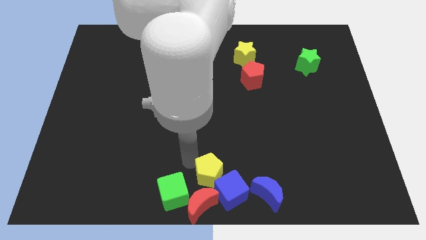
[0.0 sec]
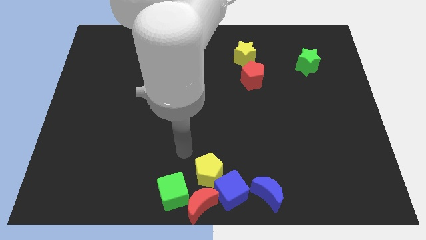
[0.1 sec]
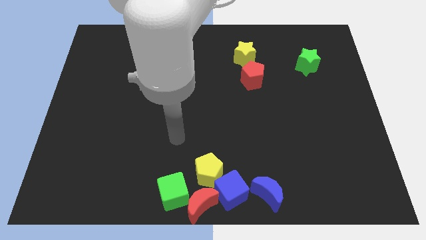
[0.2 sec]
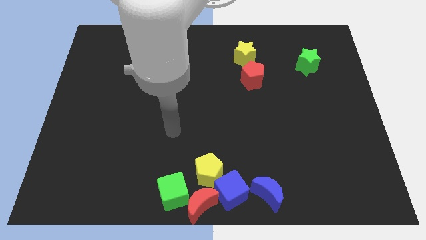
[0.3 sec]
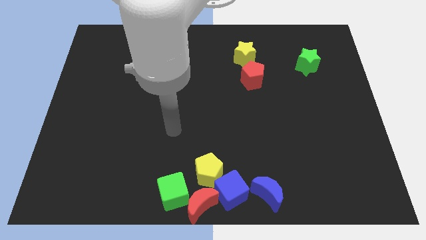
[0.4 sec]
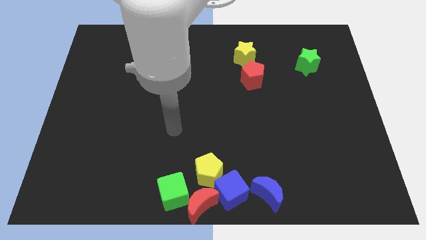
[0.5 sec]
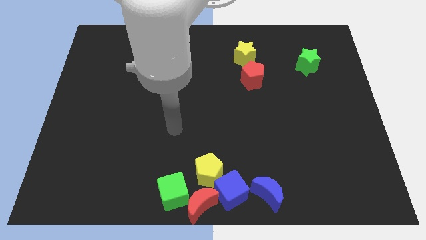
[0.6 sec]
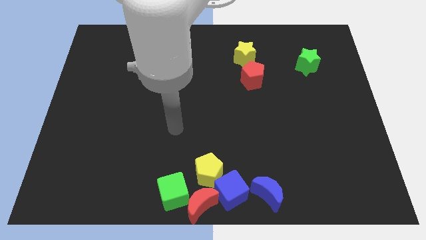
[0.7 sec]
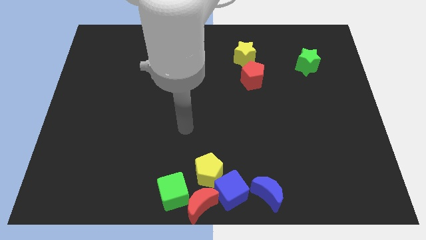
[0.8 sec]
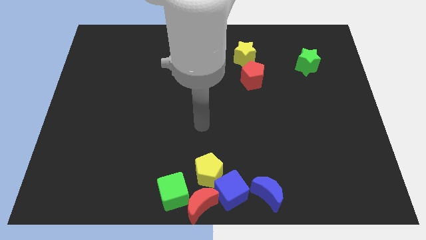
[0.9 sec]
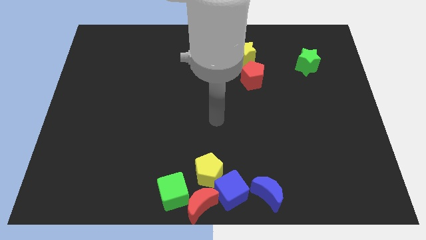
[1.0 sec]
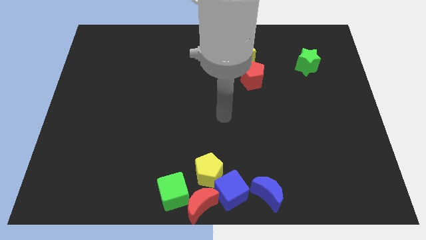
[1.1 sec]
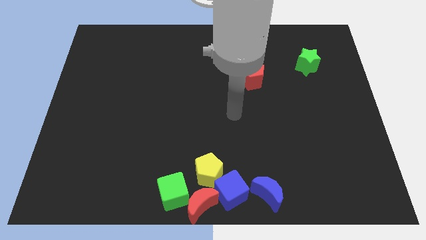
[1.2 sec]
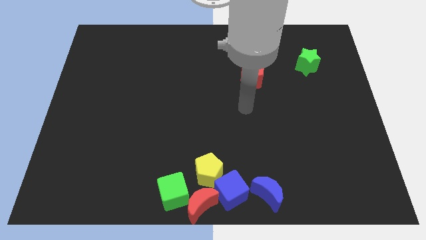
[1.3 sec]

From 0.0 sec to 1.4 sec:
move the arm away from yellow pentagon

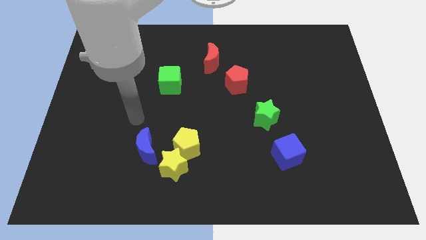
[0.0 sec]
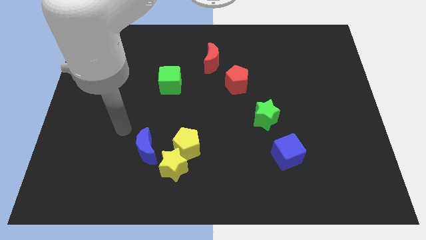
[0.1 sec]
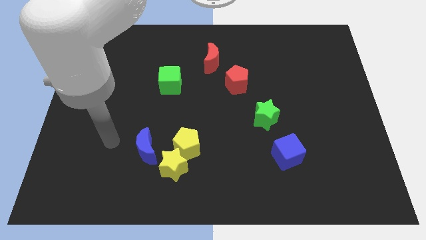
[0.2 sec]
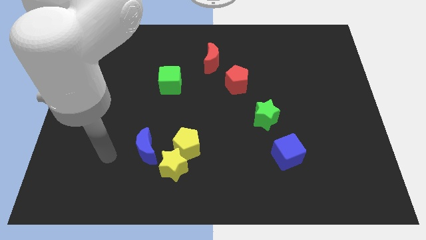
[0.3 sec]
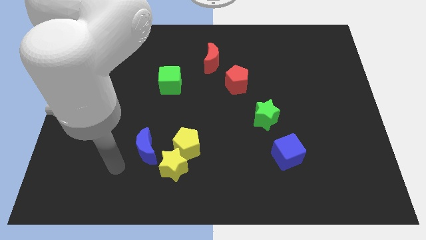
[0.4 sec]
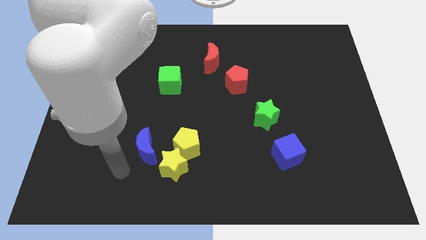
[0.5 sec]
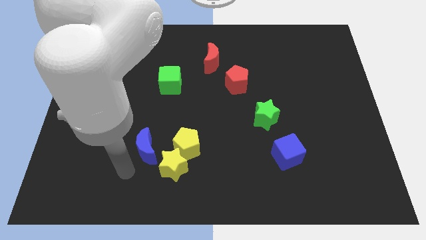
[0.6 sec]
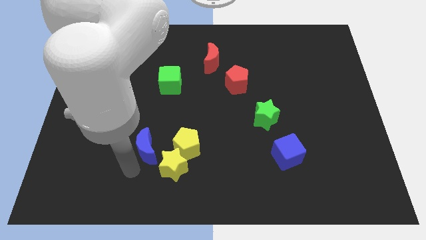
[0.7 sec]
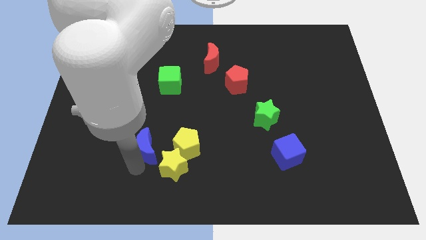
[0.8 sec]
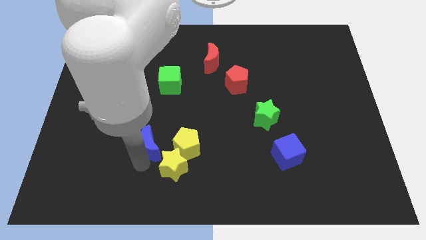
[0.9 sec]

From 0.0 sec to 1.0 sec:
move your arm bottom of the blue crescent

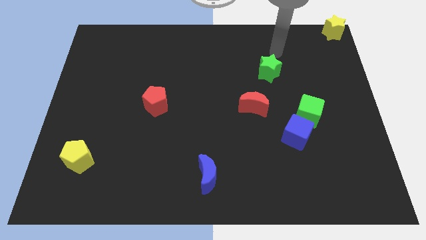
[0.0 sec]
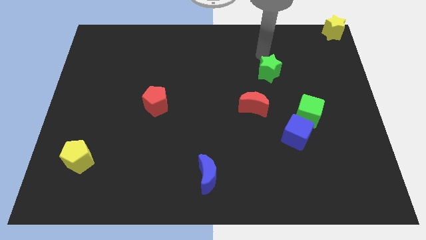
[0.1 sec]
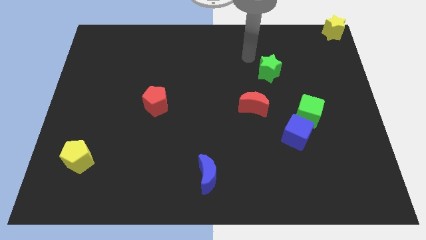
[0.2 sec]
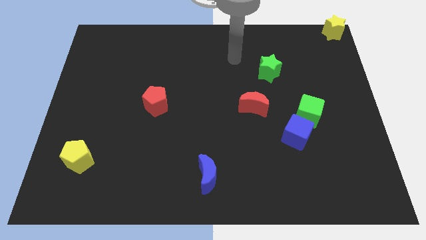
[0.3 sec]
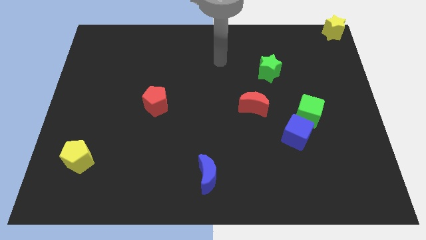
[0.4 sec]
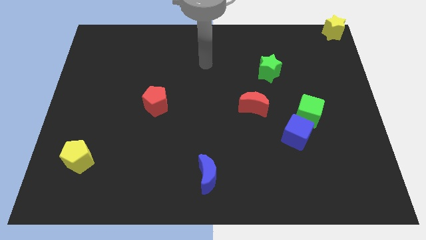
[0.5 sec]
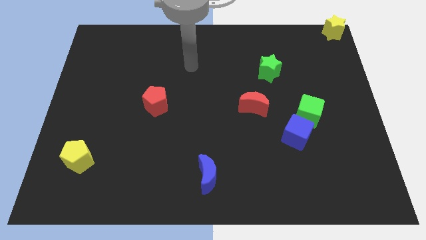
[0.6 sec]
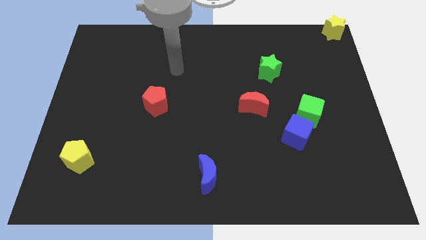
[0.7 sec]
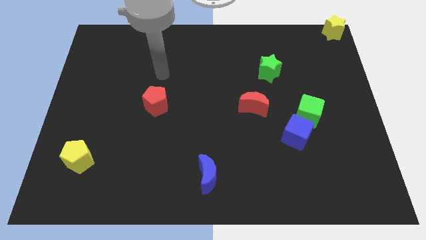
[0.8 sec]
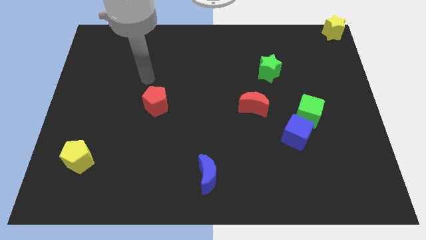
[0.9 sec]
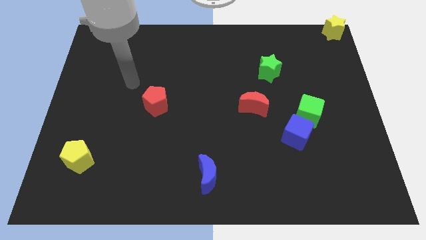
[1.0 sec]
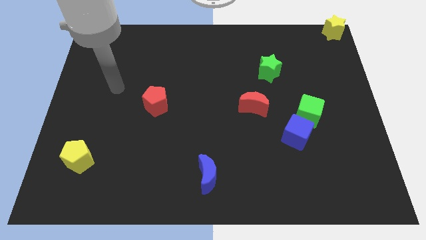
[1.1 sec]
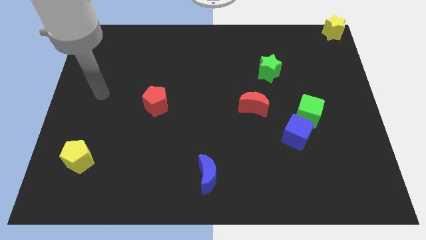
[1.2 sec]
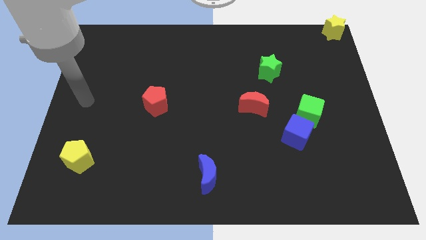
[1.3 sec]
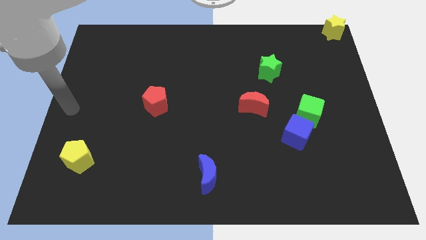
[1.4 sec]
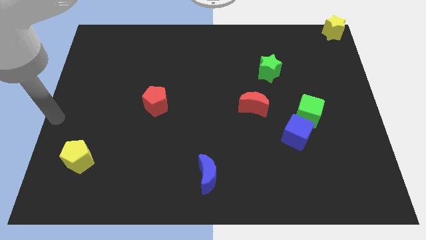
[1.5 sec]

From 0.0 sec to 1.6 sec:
move your arm away from the green star

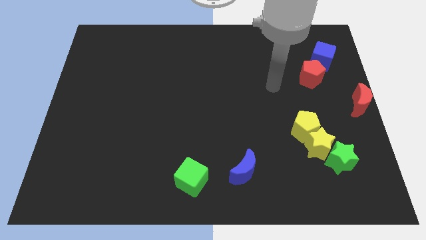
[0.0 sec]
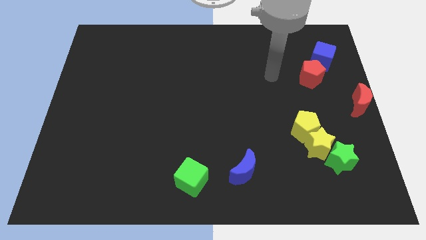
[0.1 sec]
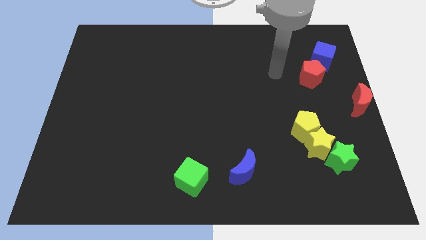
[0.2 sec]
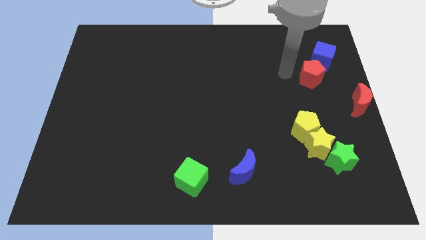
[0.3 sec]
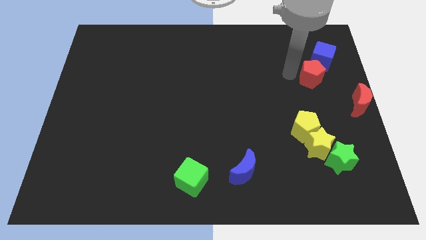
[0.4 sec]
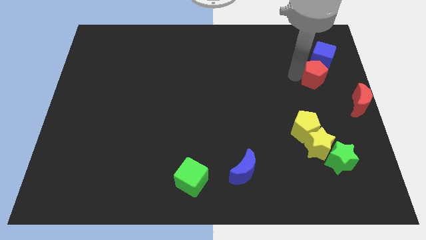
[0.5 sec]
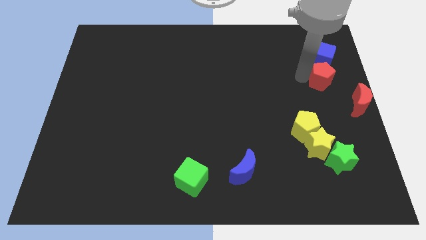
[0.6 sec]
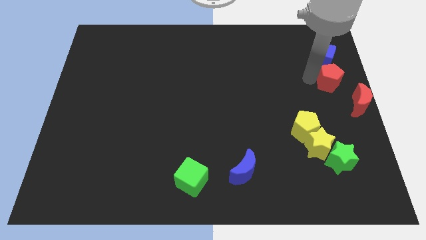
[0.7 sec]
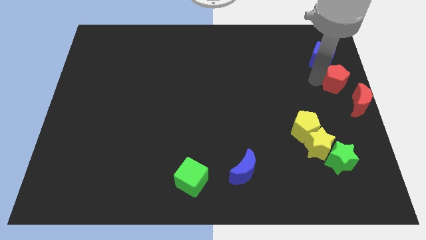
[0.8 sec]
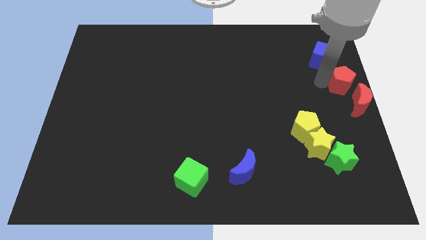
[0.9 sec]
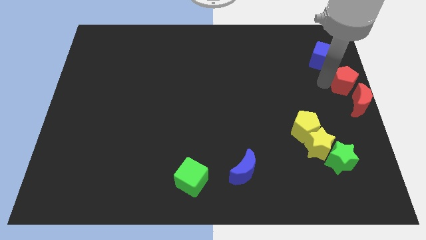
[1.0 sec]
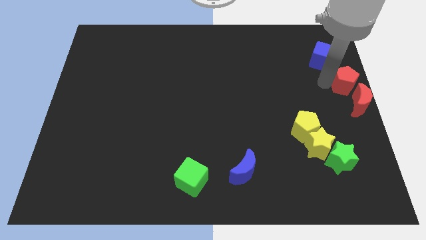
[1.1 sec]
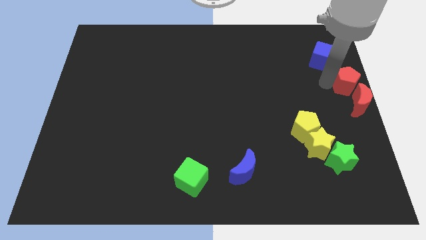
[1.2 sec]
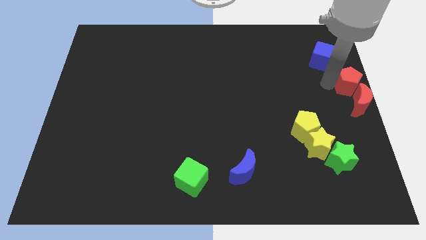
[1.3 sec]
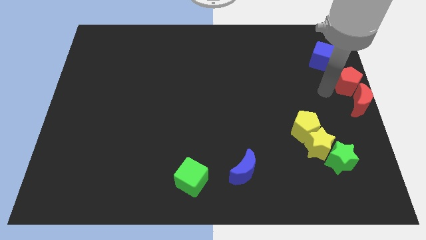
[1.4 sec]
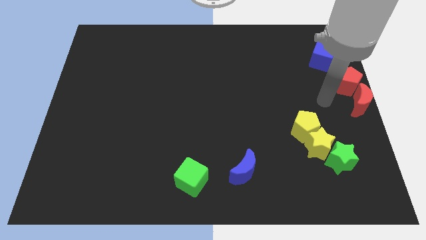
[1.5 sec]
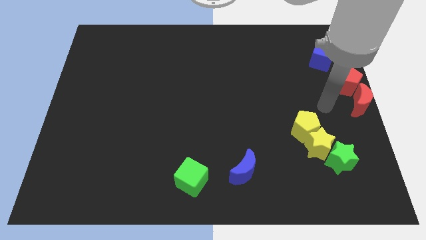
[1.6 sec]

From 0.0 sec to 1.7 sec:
push the red pentagon into the red moon

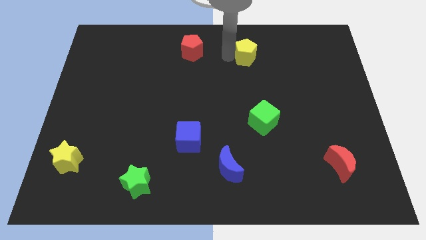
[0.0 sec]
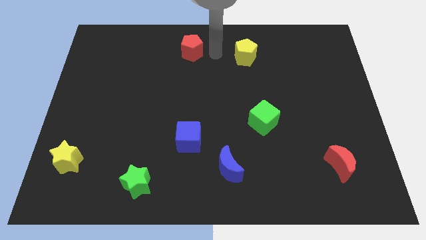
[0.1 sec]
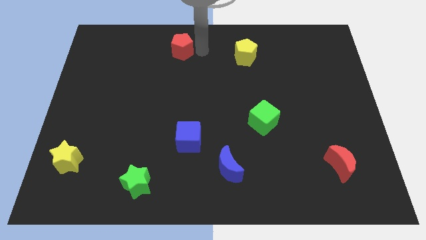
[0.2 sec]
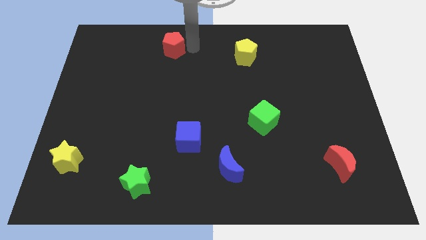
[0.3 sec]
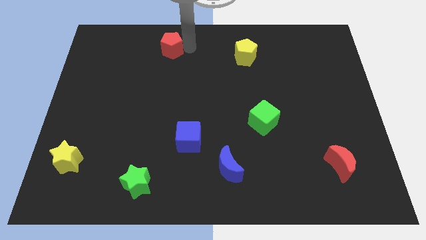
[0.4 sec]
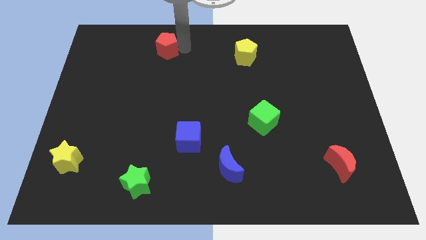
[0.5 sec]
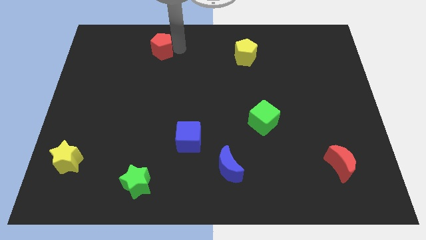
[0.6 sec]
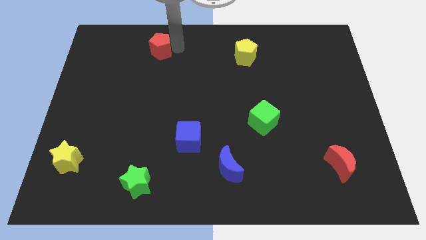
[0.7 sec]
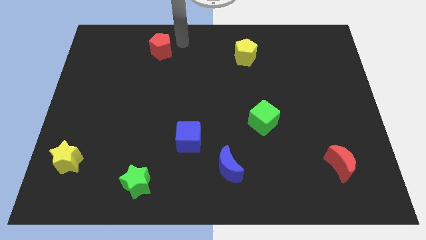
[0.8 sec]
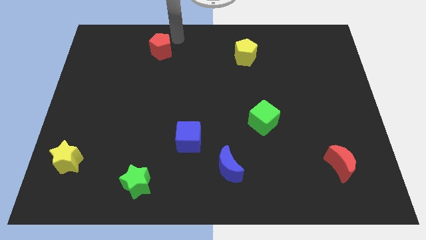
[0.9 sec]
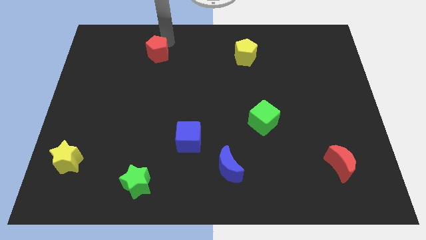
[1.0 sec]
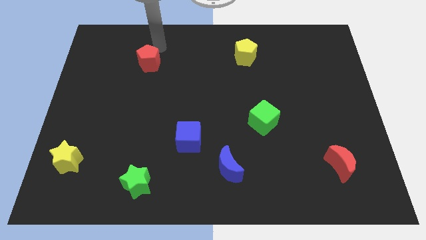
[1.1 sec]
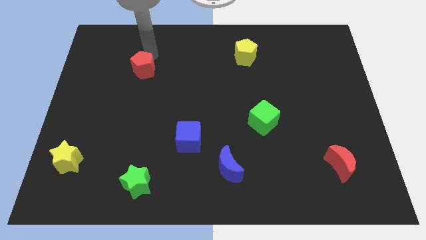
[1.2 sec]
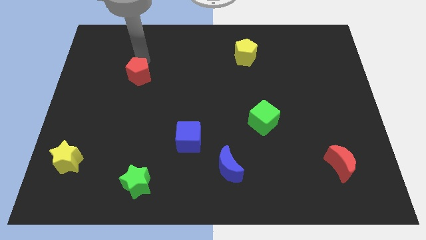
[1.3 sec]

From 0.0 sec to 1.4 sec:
move the red pentagon vertically to the green star

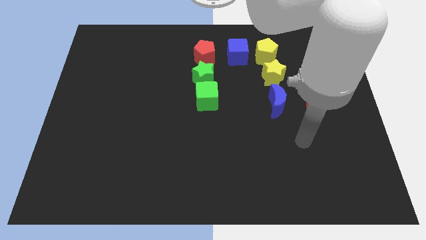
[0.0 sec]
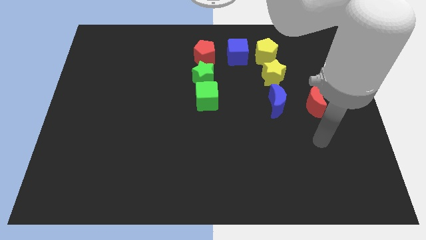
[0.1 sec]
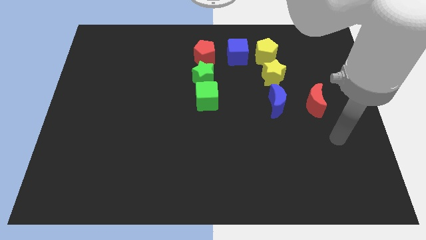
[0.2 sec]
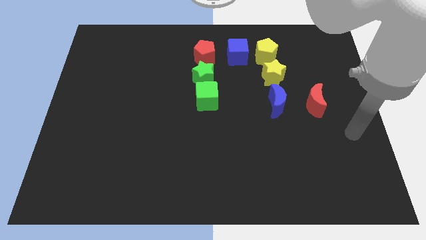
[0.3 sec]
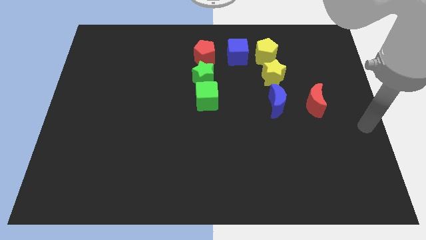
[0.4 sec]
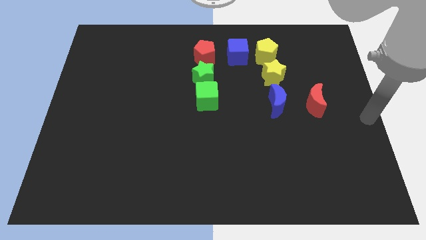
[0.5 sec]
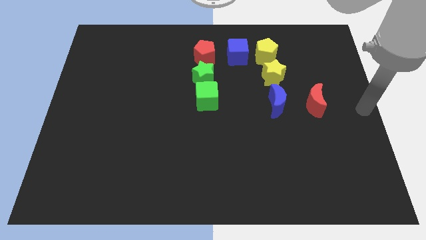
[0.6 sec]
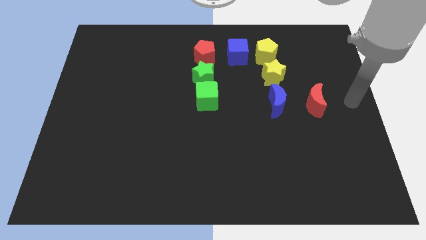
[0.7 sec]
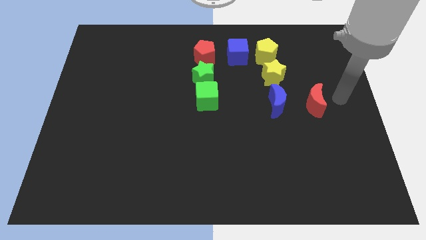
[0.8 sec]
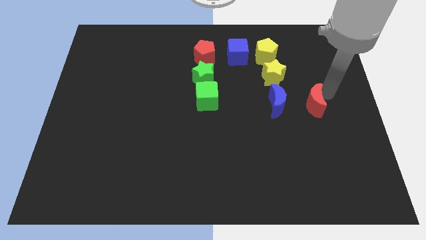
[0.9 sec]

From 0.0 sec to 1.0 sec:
move the arm towards the right of the red crescent

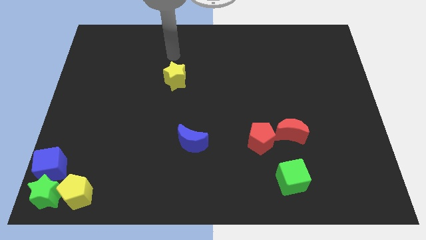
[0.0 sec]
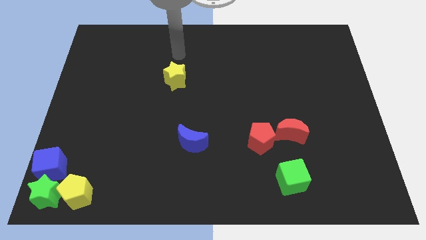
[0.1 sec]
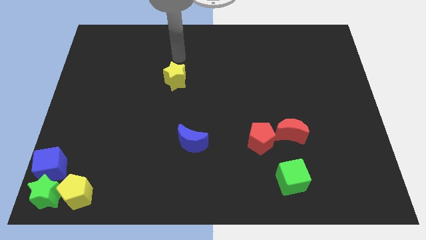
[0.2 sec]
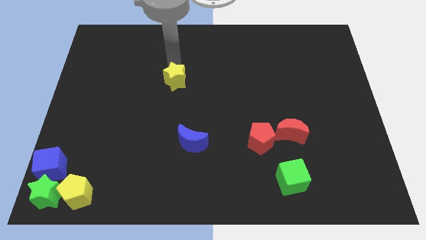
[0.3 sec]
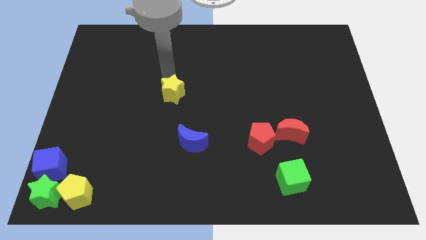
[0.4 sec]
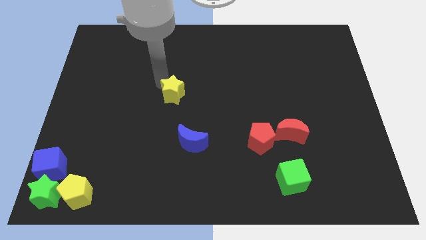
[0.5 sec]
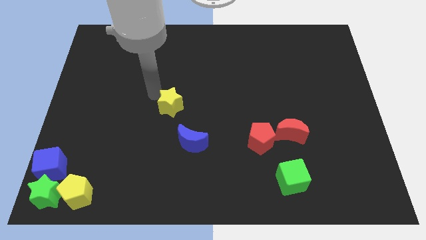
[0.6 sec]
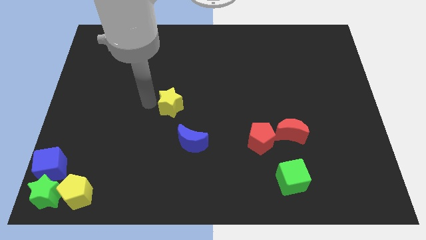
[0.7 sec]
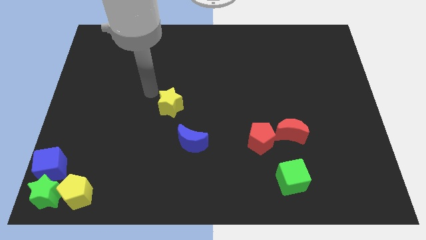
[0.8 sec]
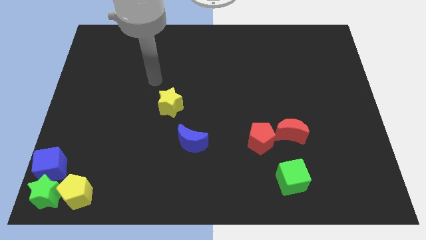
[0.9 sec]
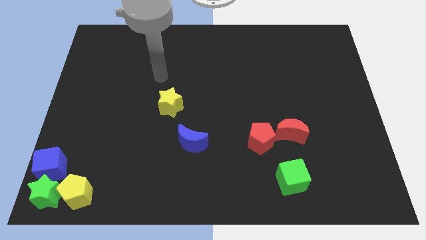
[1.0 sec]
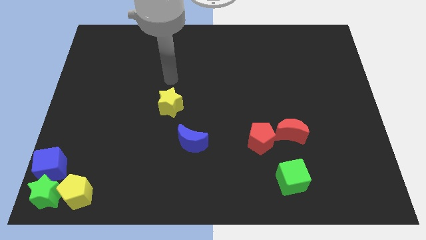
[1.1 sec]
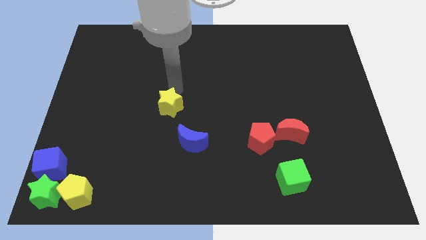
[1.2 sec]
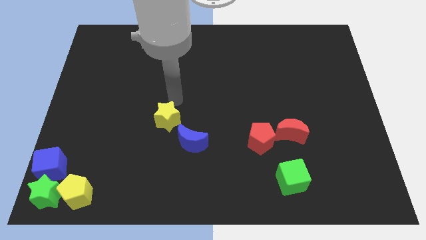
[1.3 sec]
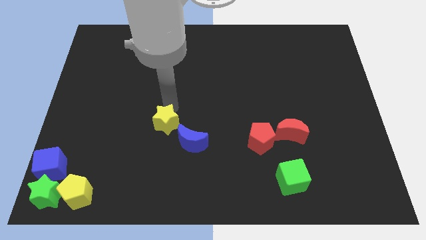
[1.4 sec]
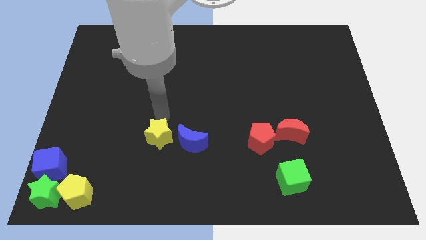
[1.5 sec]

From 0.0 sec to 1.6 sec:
slide the yellow star slightly towards down
